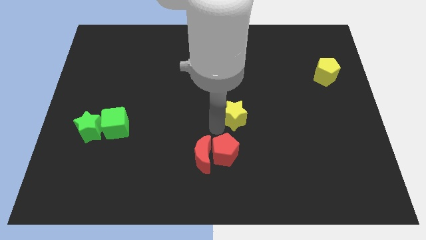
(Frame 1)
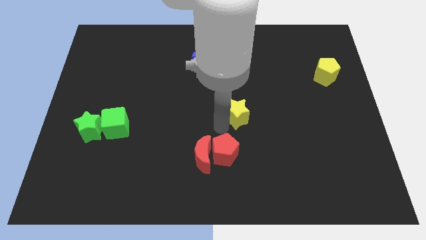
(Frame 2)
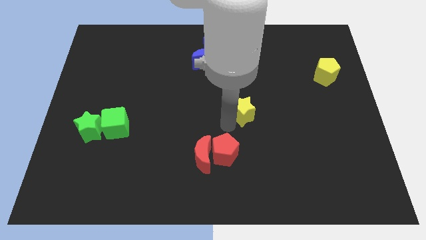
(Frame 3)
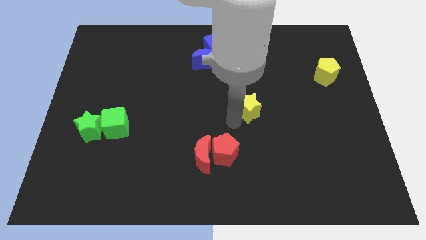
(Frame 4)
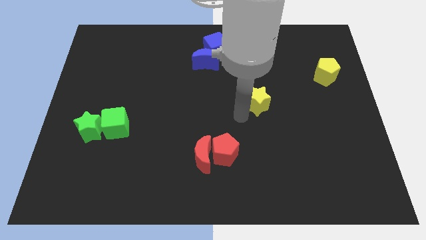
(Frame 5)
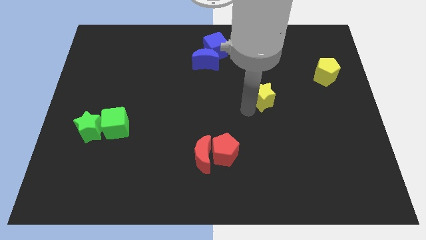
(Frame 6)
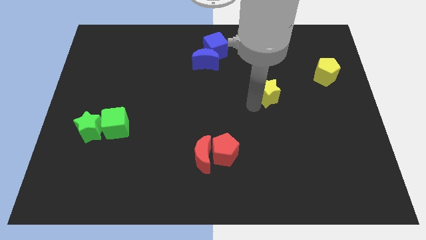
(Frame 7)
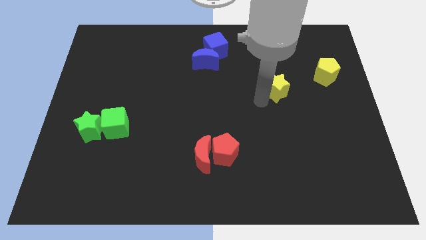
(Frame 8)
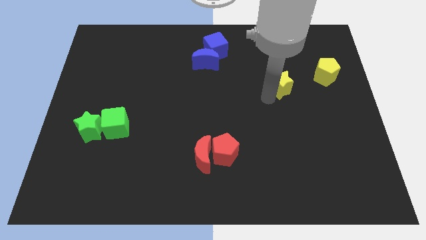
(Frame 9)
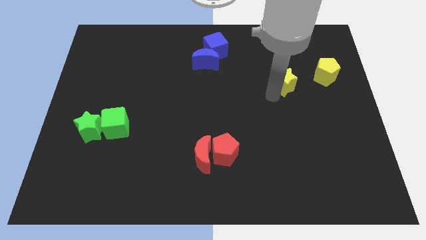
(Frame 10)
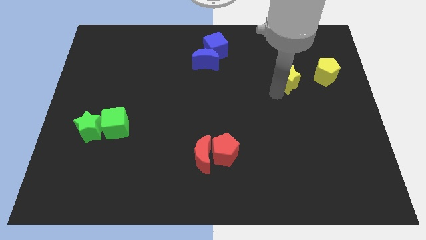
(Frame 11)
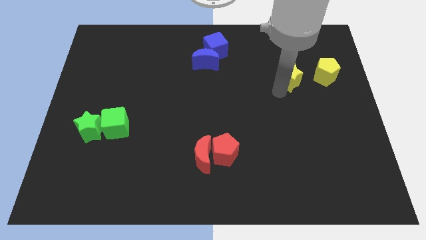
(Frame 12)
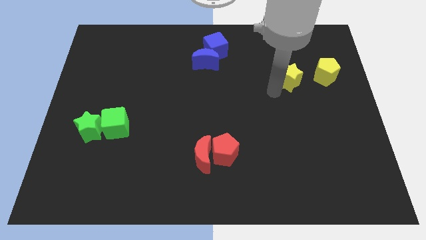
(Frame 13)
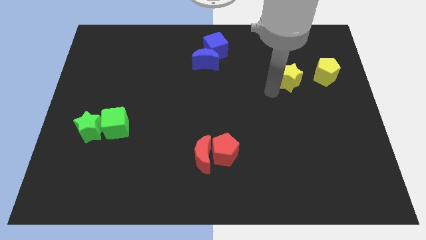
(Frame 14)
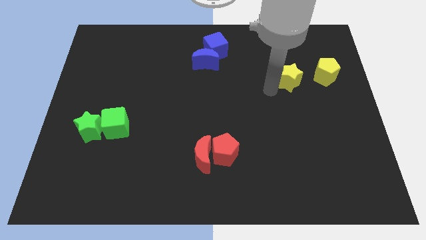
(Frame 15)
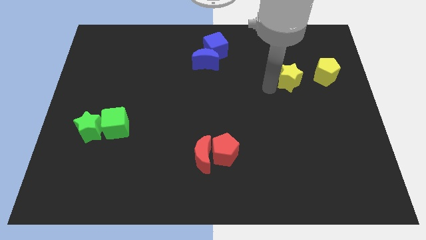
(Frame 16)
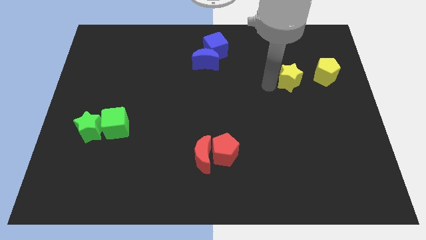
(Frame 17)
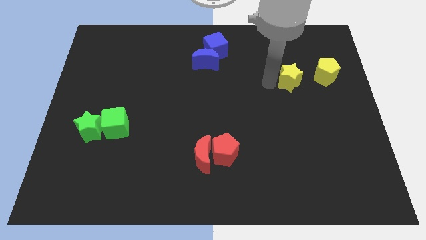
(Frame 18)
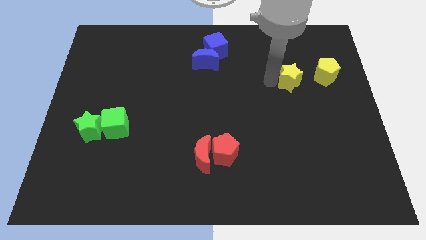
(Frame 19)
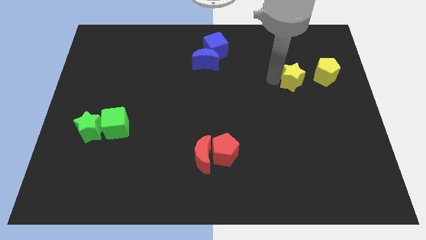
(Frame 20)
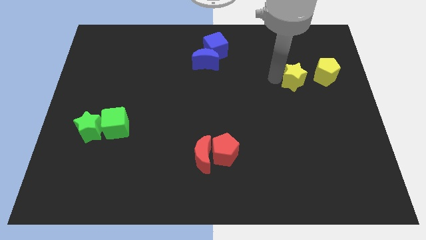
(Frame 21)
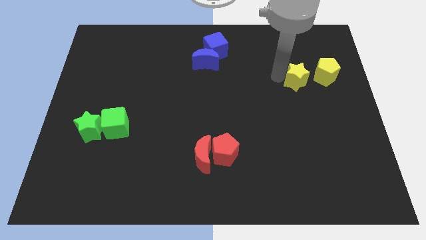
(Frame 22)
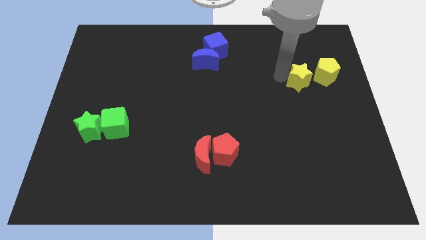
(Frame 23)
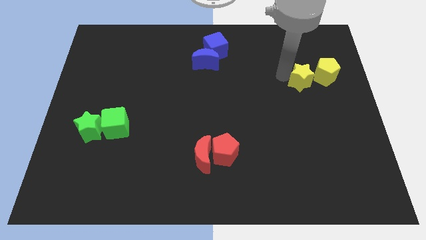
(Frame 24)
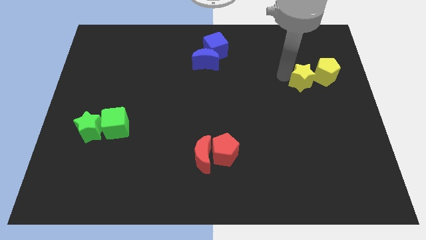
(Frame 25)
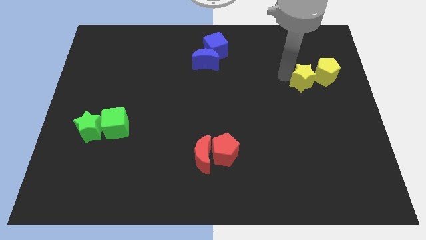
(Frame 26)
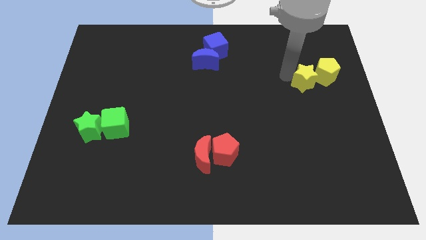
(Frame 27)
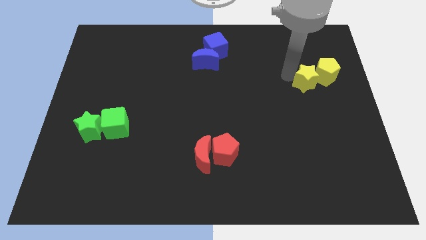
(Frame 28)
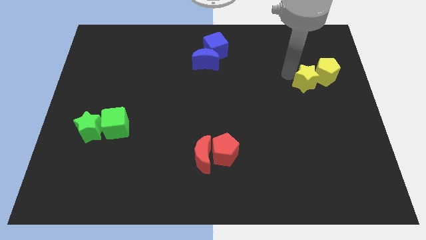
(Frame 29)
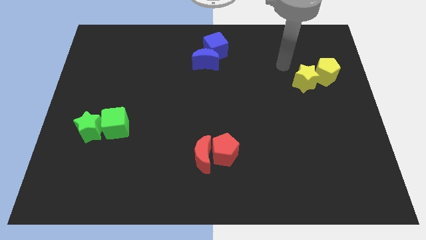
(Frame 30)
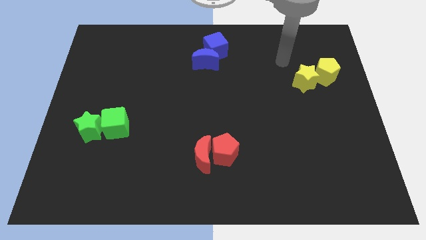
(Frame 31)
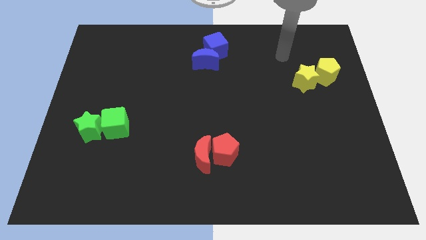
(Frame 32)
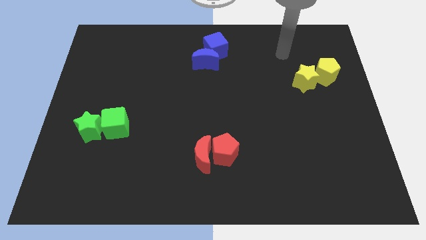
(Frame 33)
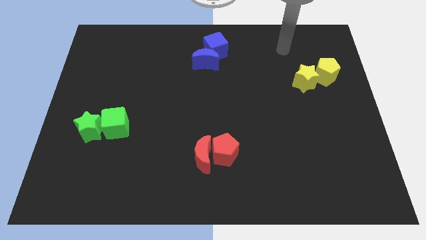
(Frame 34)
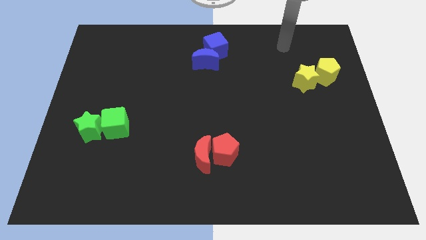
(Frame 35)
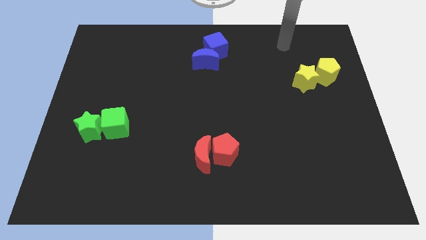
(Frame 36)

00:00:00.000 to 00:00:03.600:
place the yellow star to the bottom left of the yellow pentagon

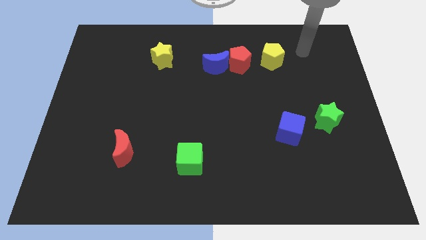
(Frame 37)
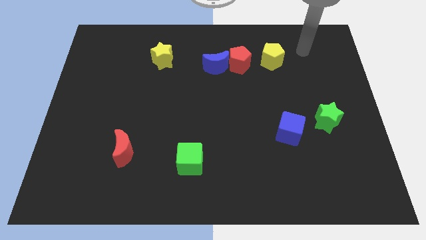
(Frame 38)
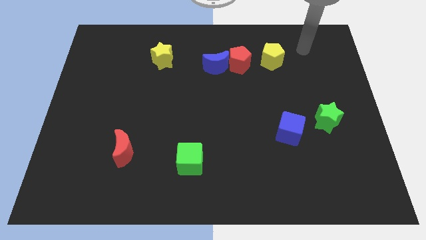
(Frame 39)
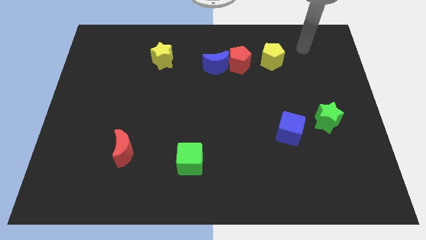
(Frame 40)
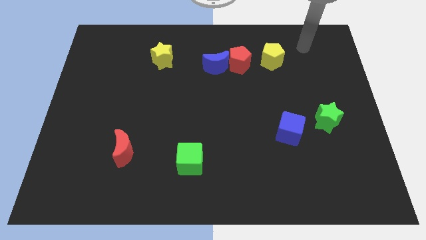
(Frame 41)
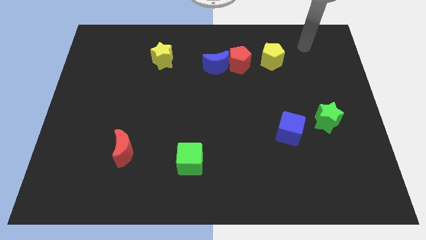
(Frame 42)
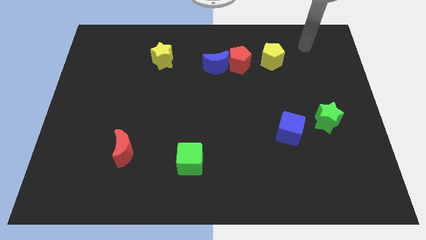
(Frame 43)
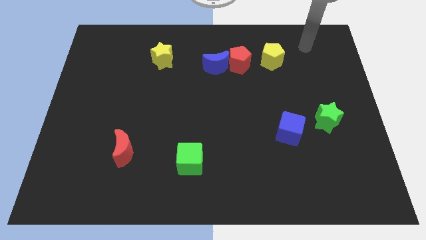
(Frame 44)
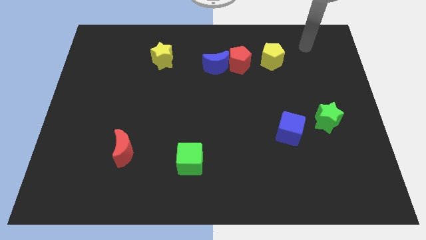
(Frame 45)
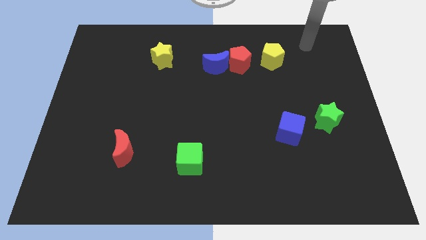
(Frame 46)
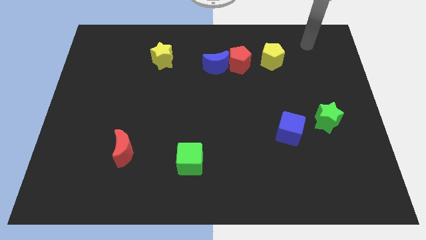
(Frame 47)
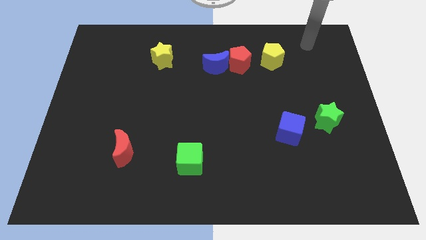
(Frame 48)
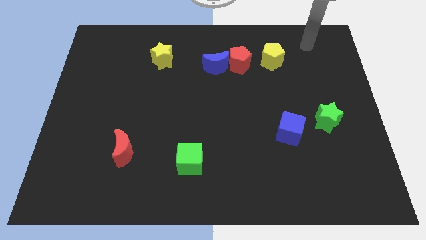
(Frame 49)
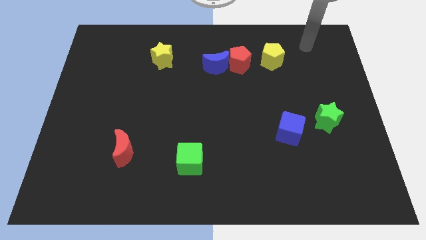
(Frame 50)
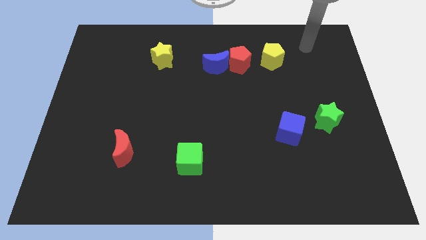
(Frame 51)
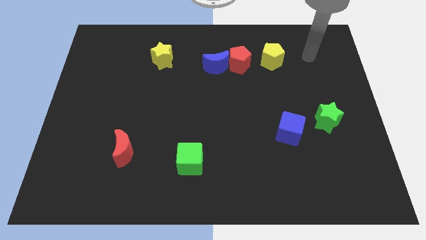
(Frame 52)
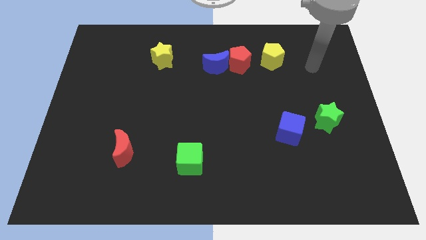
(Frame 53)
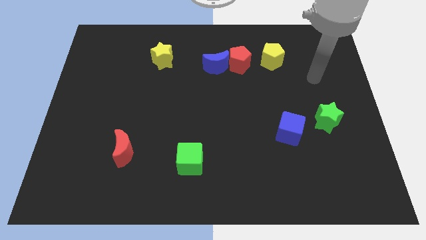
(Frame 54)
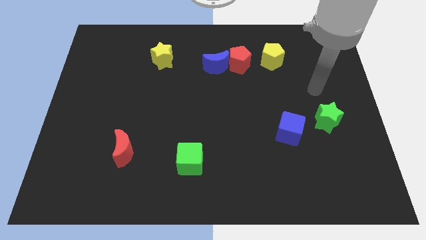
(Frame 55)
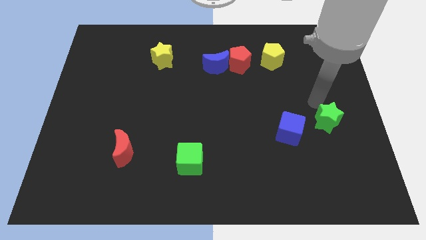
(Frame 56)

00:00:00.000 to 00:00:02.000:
point the arm above the green cube

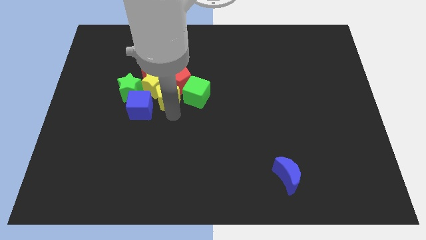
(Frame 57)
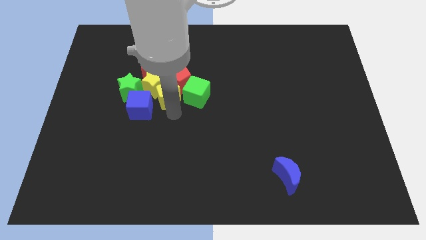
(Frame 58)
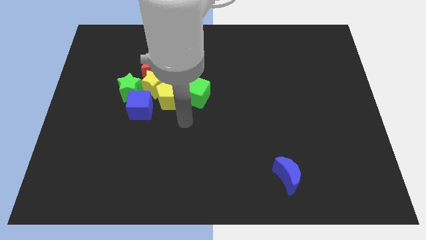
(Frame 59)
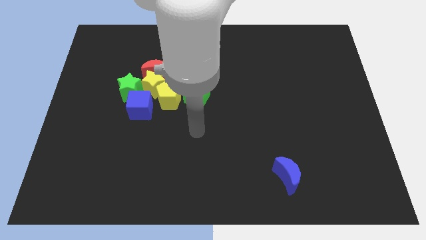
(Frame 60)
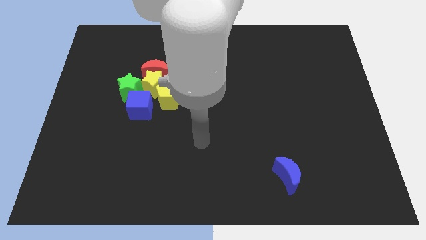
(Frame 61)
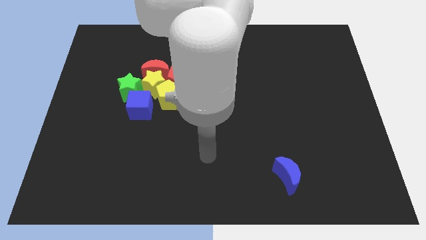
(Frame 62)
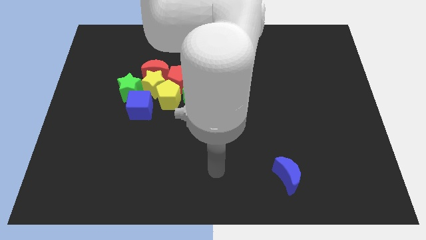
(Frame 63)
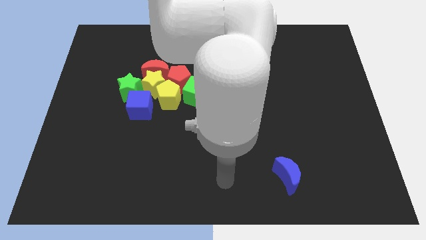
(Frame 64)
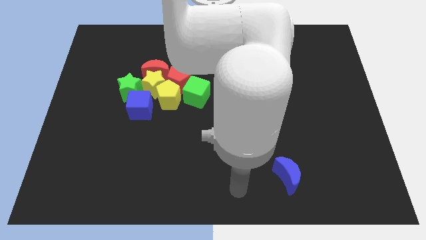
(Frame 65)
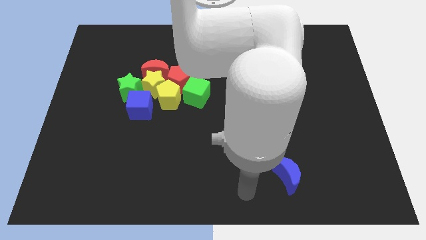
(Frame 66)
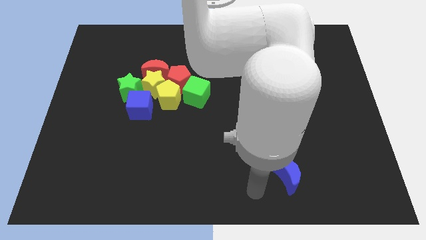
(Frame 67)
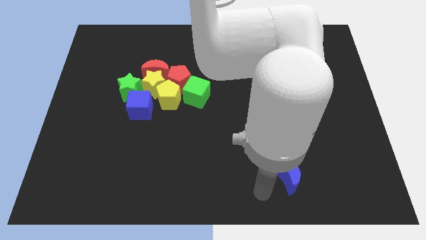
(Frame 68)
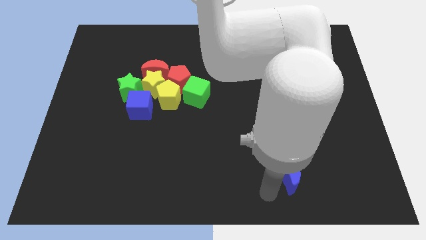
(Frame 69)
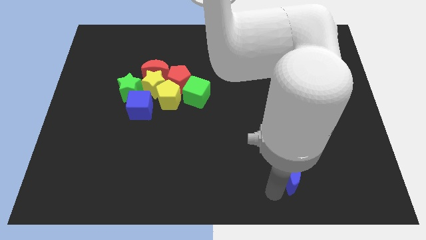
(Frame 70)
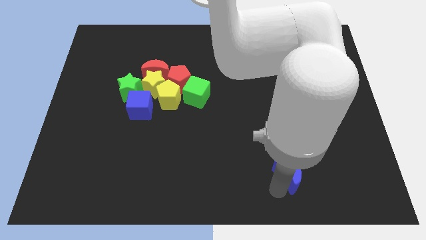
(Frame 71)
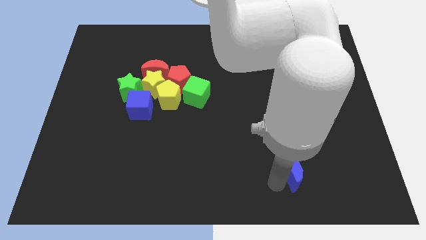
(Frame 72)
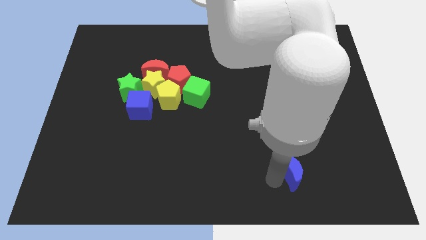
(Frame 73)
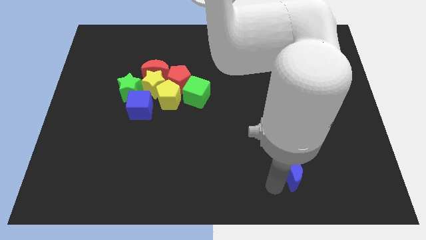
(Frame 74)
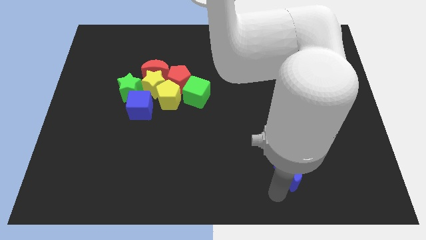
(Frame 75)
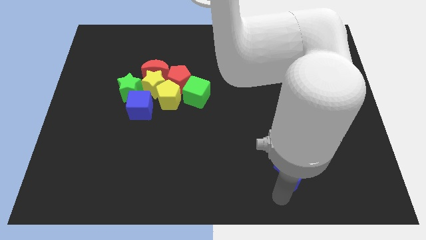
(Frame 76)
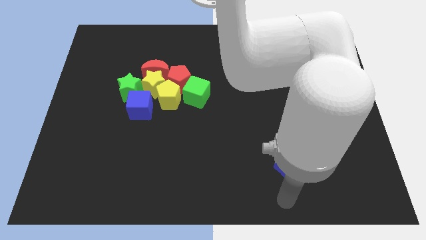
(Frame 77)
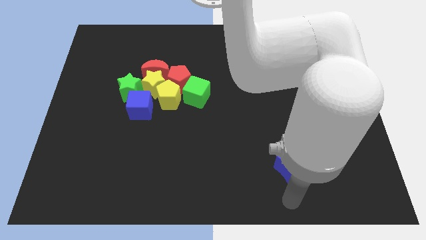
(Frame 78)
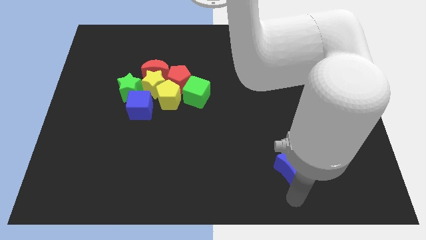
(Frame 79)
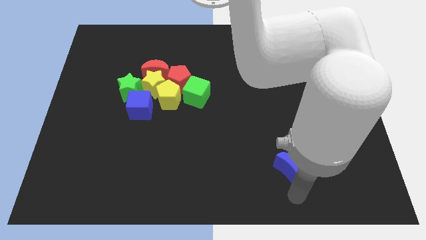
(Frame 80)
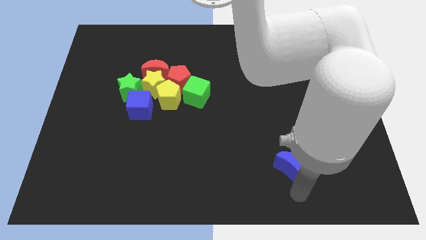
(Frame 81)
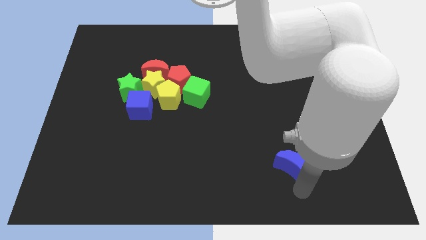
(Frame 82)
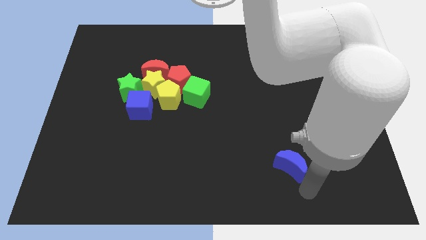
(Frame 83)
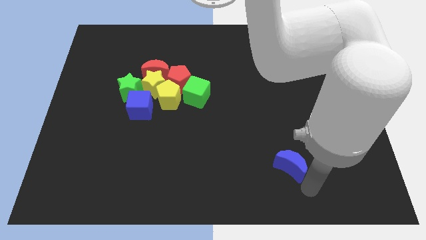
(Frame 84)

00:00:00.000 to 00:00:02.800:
move the arm away from the yellow pentagon

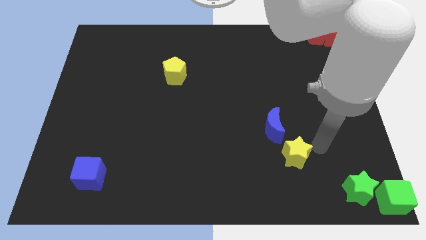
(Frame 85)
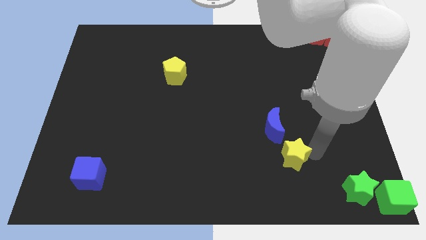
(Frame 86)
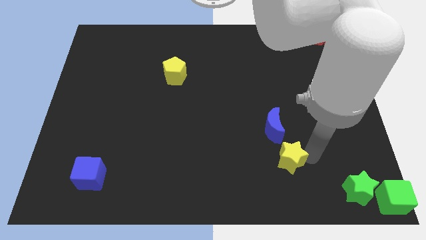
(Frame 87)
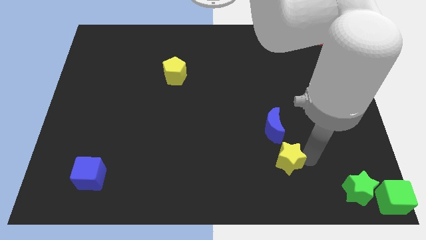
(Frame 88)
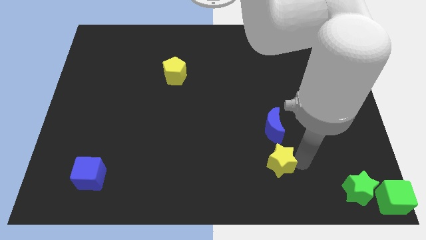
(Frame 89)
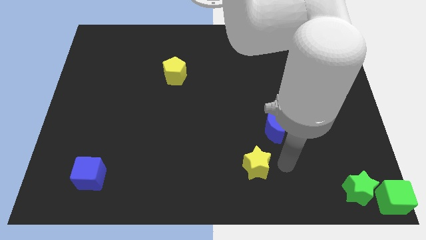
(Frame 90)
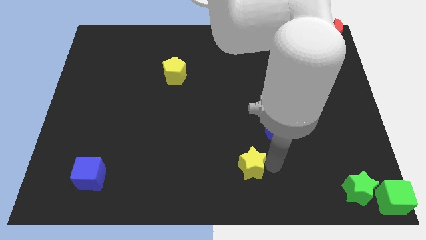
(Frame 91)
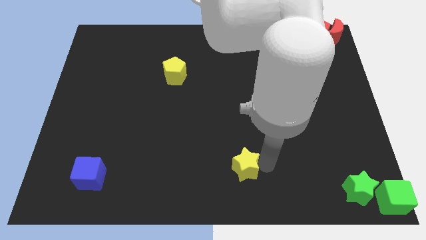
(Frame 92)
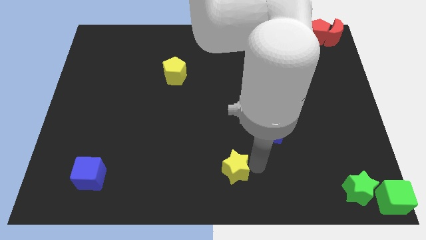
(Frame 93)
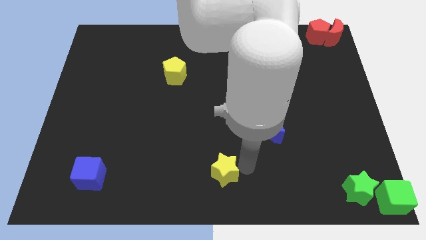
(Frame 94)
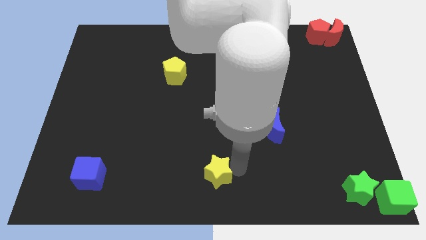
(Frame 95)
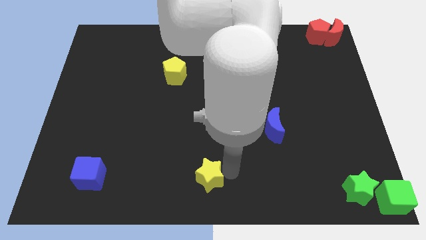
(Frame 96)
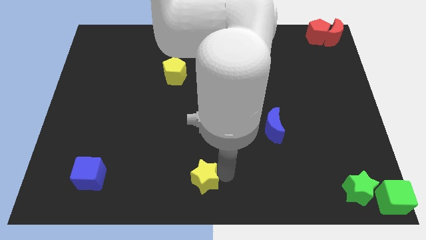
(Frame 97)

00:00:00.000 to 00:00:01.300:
move yellow star away from the blue crescent
